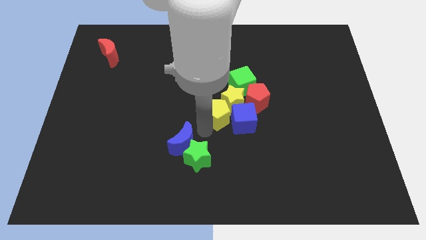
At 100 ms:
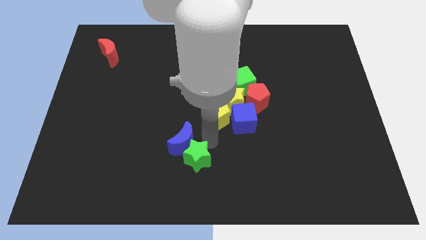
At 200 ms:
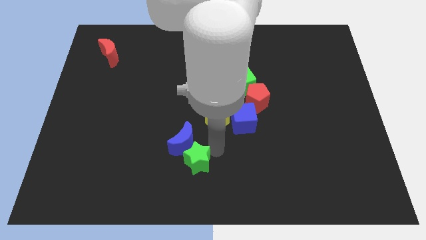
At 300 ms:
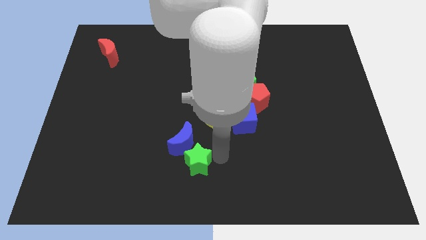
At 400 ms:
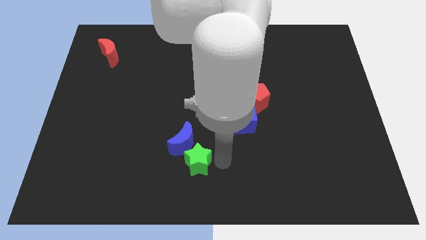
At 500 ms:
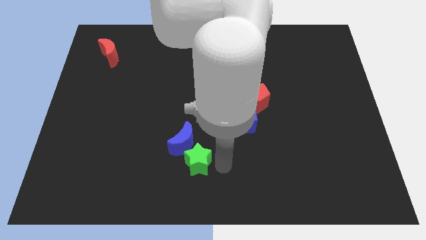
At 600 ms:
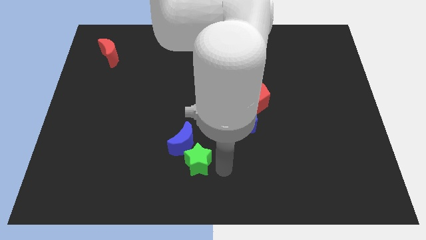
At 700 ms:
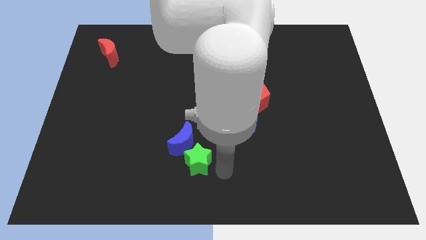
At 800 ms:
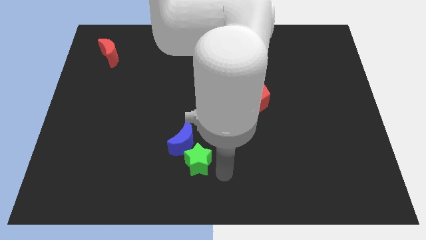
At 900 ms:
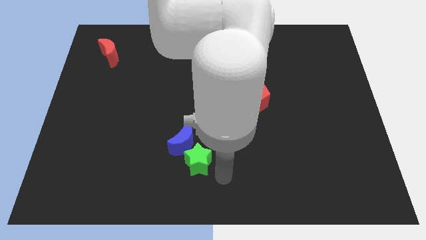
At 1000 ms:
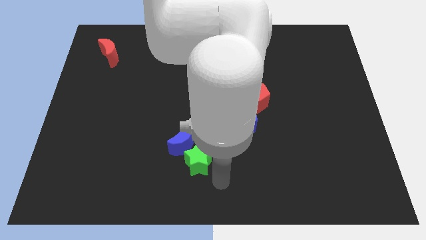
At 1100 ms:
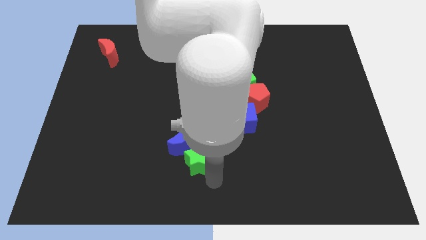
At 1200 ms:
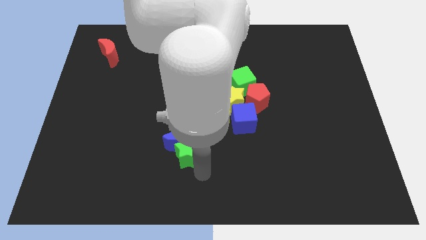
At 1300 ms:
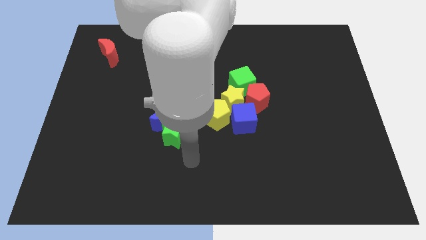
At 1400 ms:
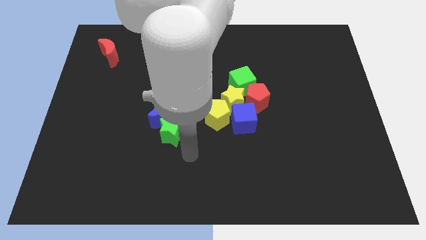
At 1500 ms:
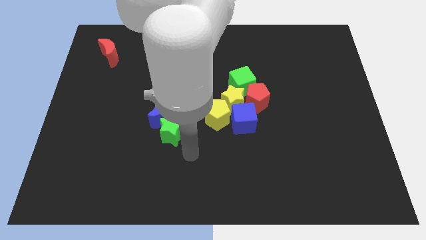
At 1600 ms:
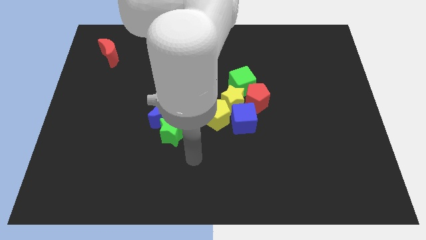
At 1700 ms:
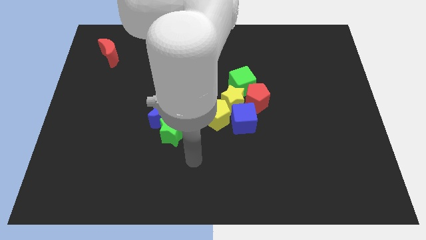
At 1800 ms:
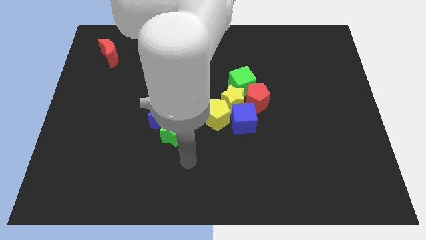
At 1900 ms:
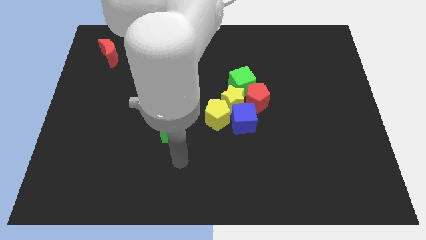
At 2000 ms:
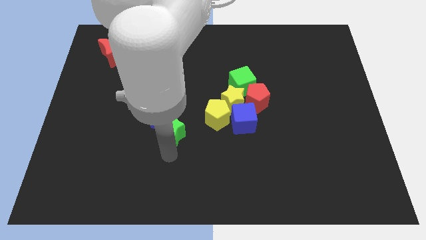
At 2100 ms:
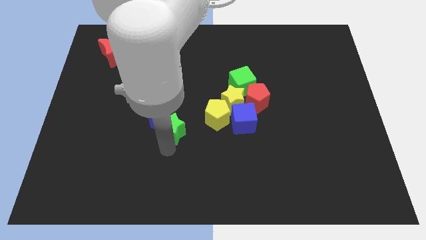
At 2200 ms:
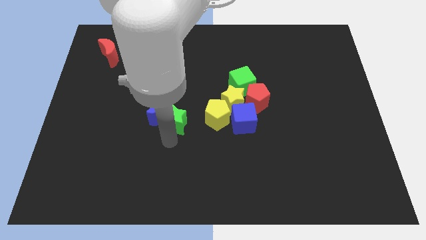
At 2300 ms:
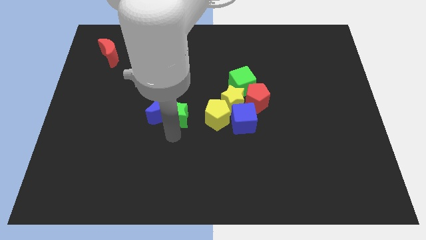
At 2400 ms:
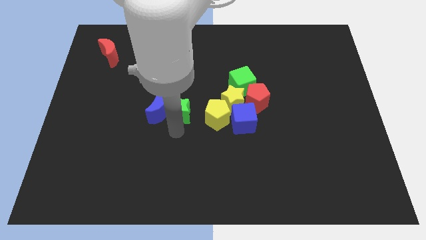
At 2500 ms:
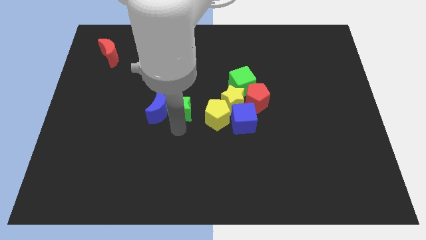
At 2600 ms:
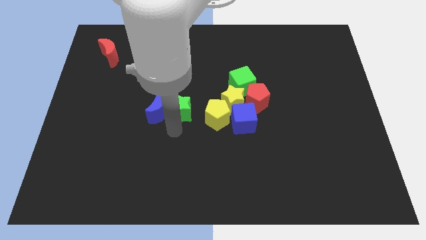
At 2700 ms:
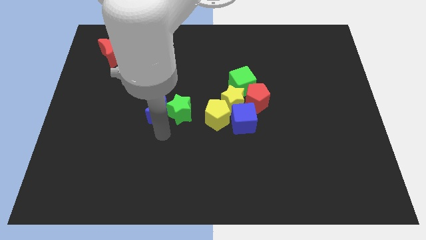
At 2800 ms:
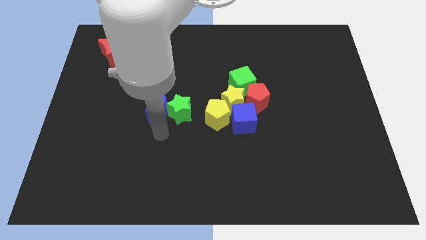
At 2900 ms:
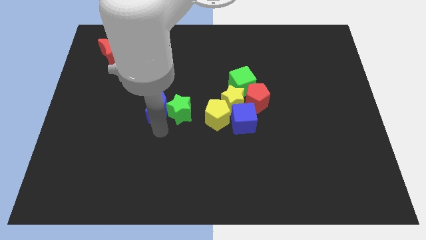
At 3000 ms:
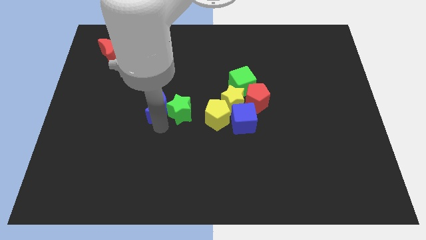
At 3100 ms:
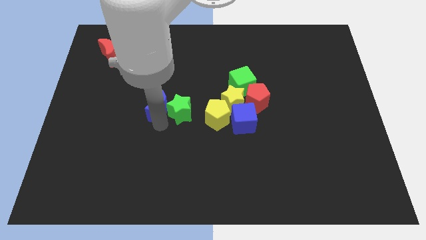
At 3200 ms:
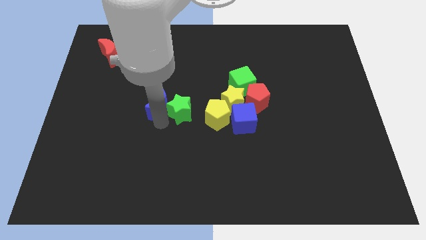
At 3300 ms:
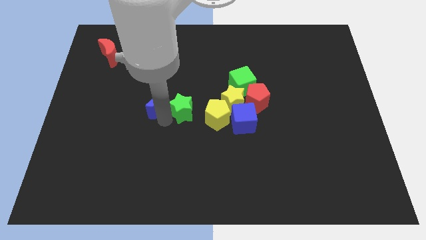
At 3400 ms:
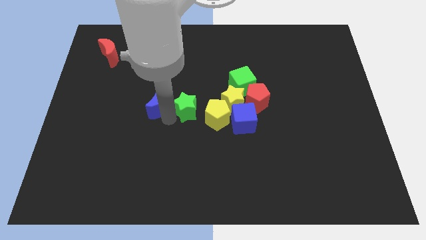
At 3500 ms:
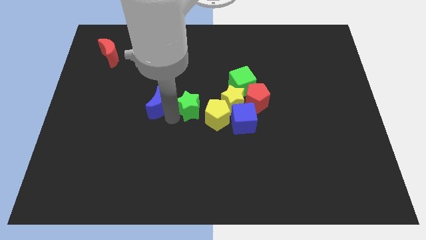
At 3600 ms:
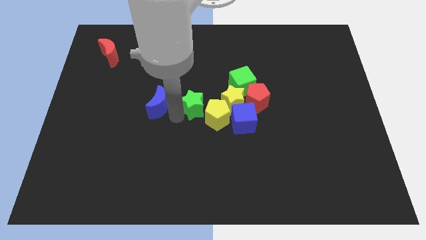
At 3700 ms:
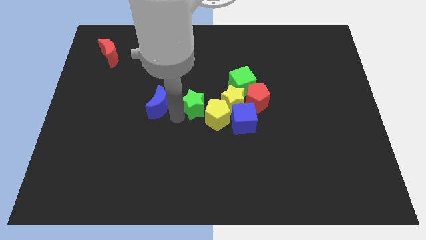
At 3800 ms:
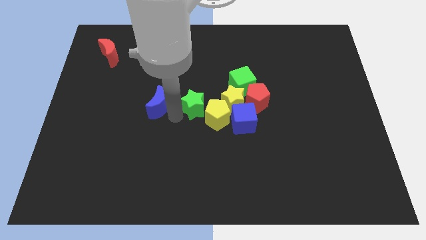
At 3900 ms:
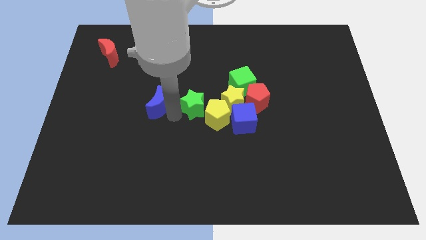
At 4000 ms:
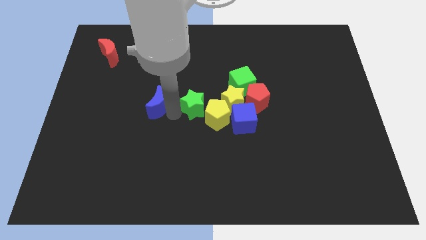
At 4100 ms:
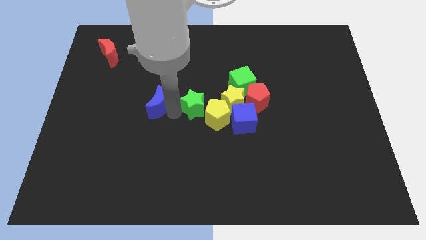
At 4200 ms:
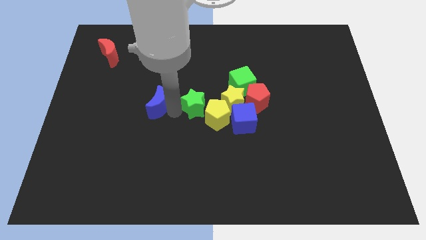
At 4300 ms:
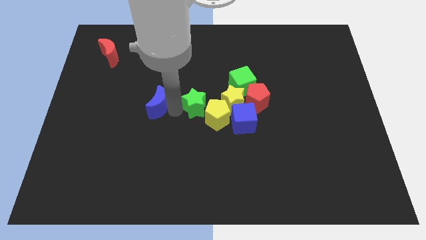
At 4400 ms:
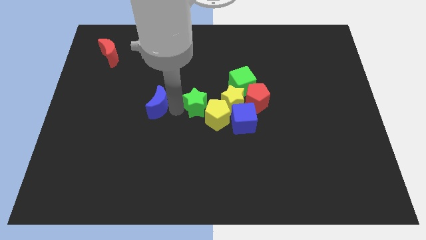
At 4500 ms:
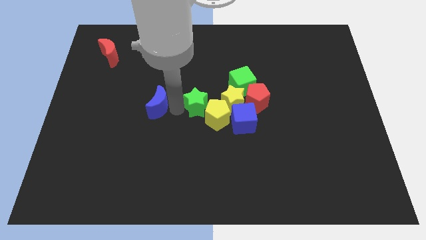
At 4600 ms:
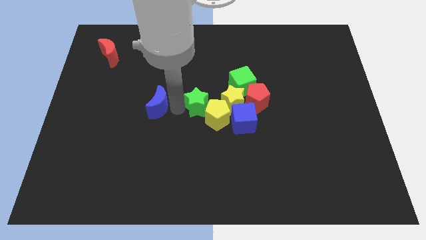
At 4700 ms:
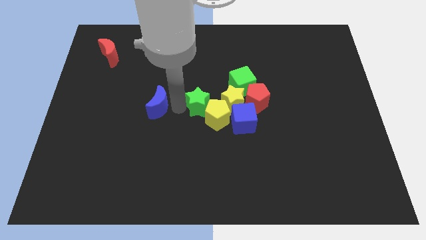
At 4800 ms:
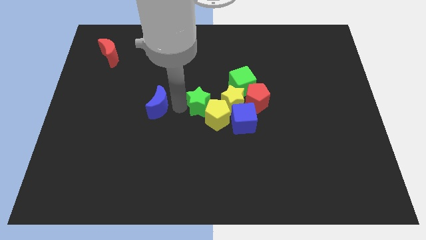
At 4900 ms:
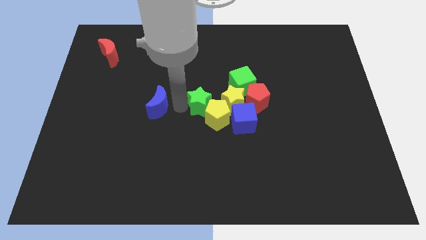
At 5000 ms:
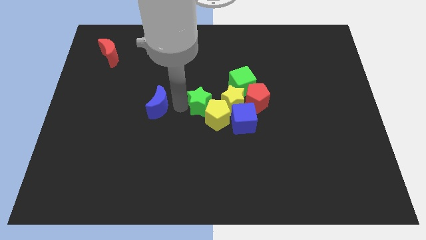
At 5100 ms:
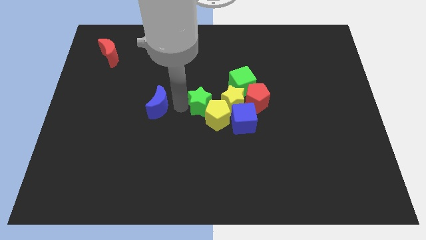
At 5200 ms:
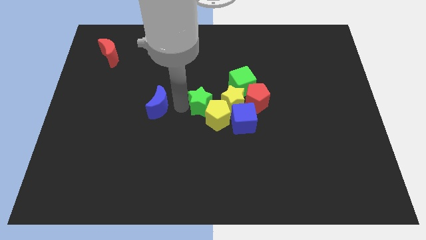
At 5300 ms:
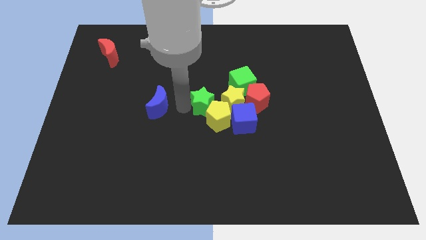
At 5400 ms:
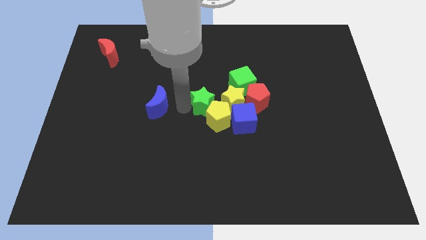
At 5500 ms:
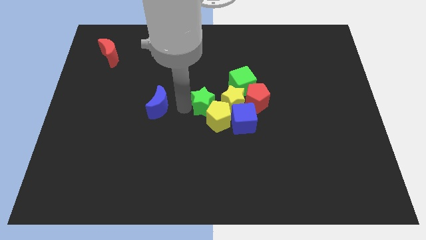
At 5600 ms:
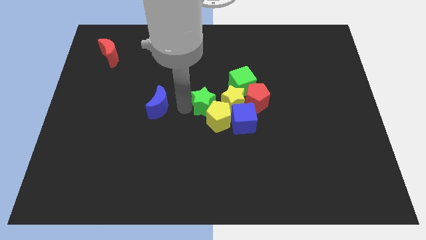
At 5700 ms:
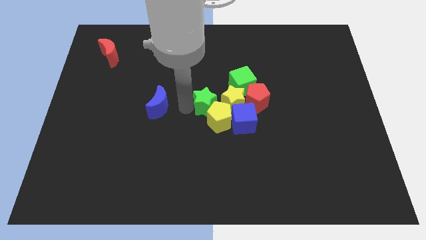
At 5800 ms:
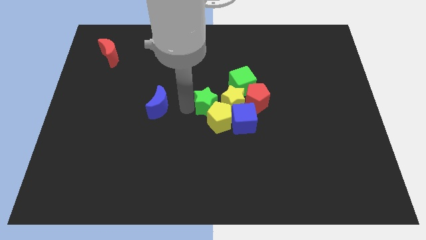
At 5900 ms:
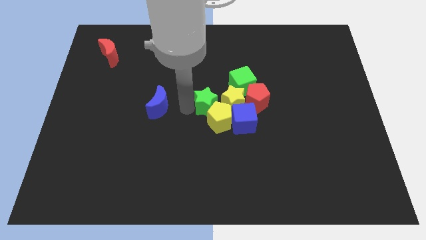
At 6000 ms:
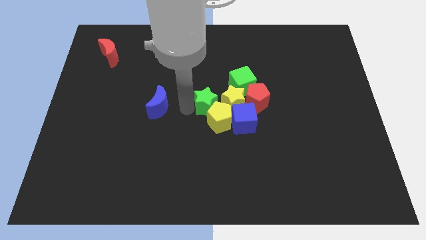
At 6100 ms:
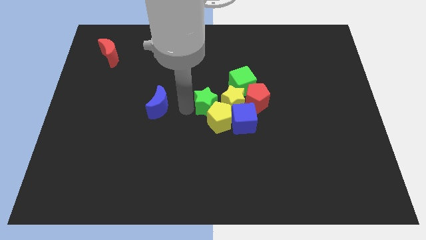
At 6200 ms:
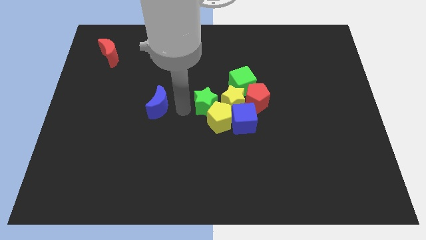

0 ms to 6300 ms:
place the green star towards the yellow star

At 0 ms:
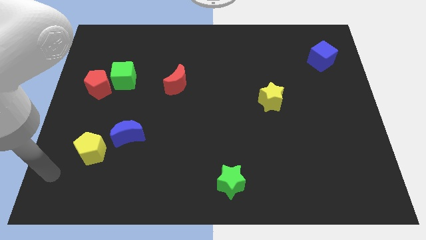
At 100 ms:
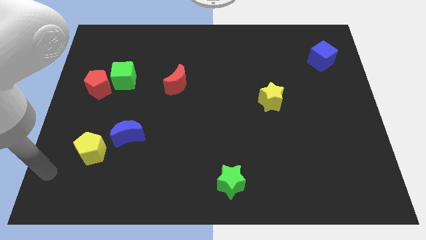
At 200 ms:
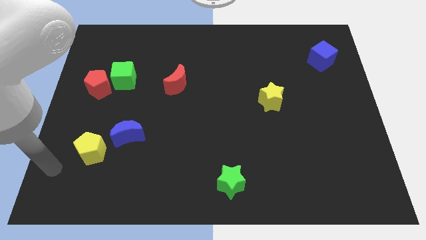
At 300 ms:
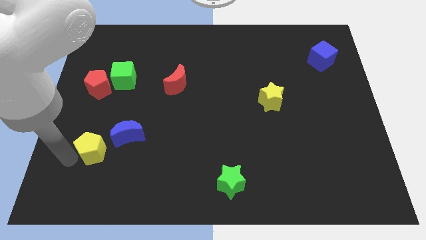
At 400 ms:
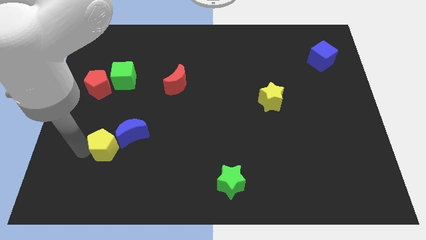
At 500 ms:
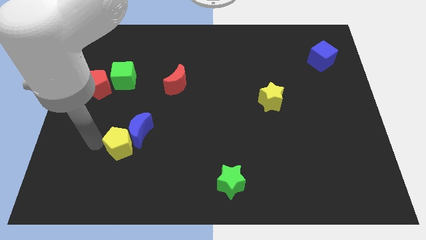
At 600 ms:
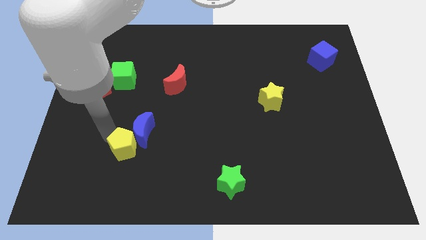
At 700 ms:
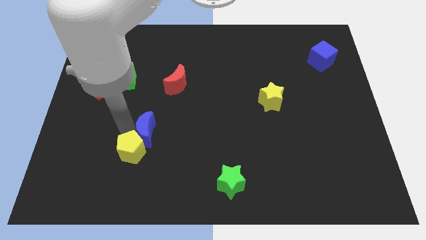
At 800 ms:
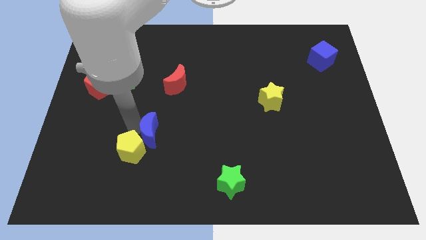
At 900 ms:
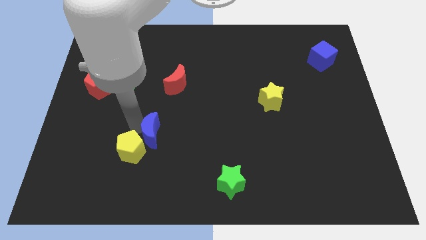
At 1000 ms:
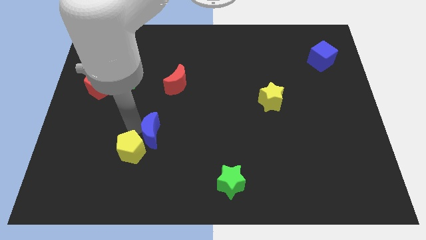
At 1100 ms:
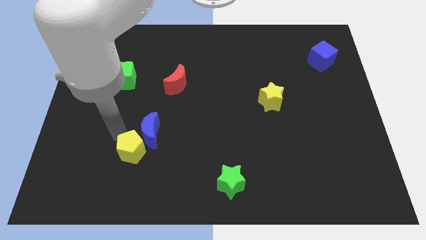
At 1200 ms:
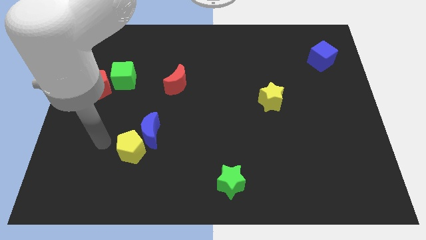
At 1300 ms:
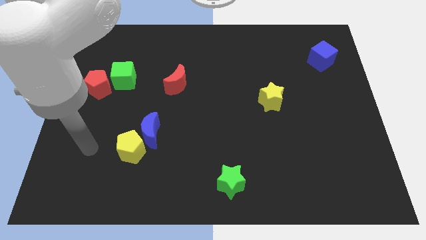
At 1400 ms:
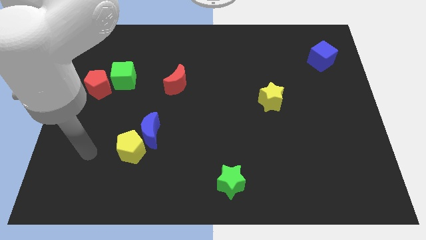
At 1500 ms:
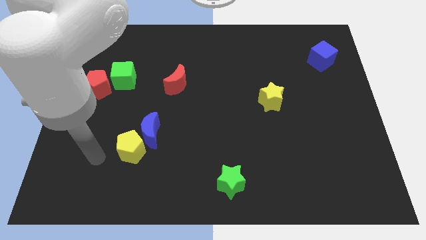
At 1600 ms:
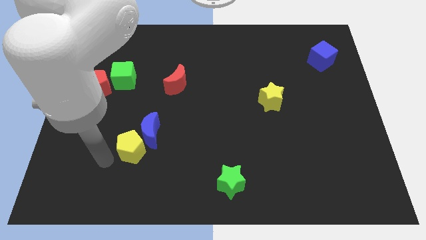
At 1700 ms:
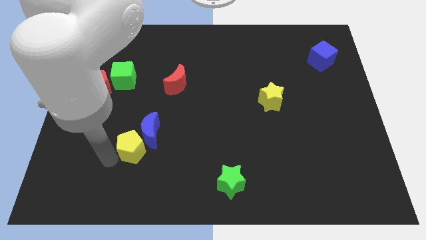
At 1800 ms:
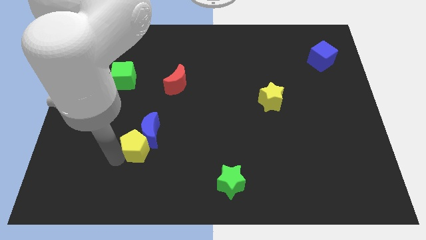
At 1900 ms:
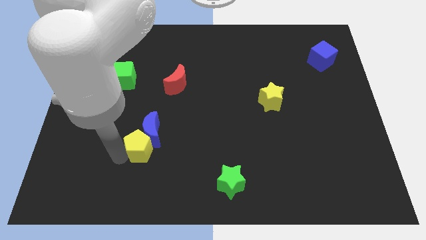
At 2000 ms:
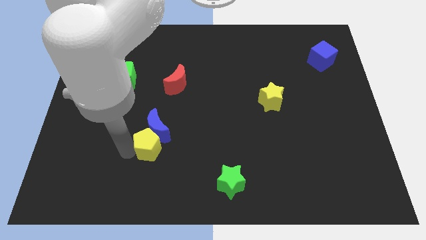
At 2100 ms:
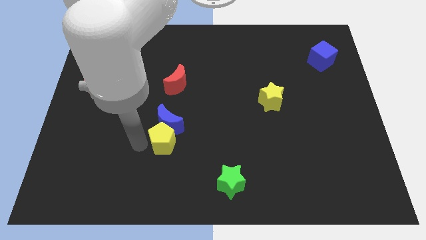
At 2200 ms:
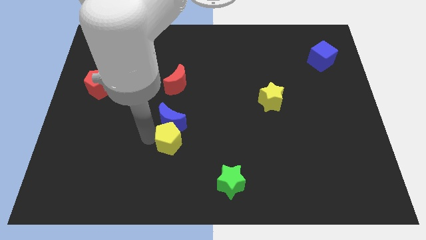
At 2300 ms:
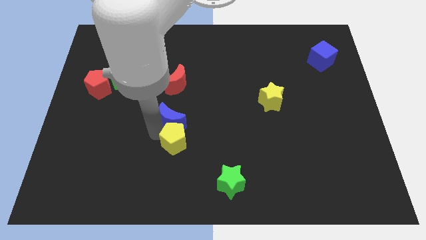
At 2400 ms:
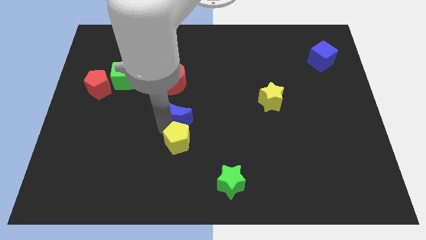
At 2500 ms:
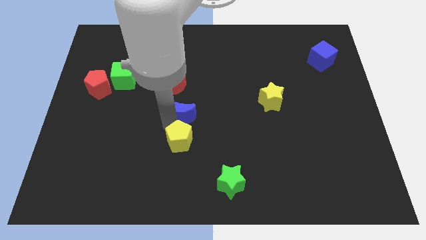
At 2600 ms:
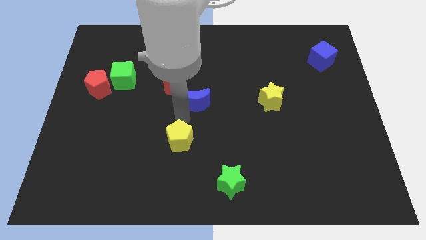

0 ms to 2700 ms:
push yellow pentagon vertically below the blue moon
